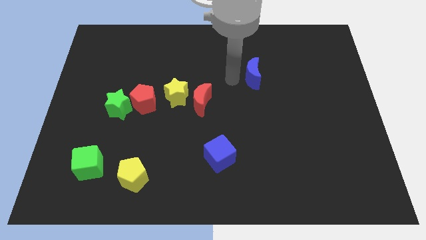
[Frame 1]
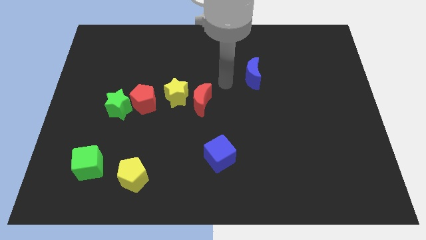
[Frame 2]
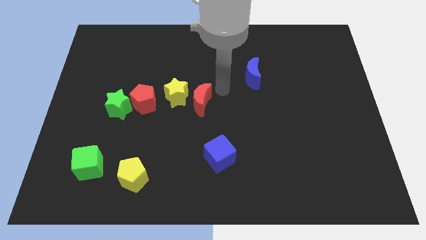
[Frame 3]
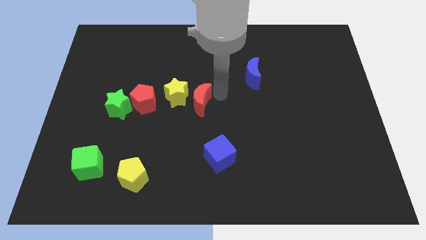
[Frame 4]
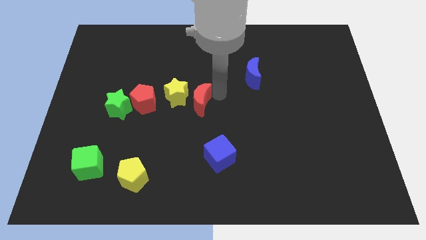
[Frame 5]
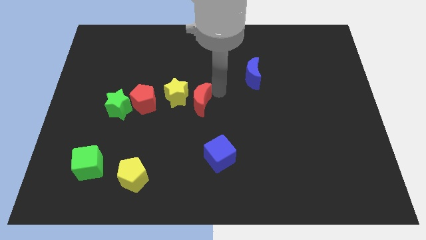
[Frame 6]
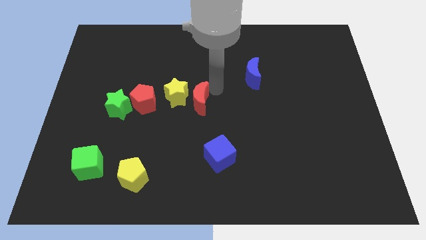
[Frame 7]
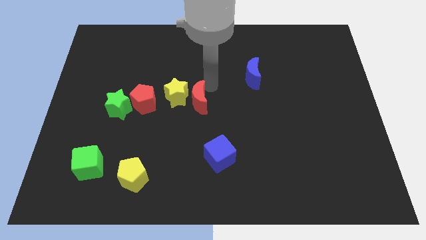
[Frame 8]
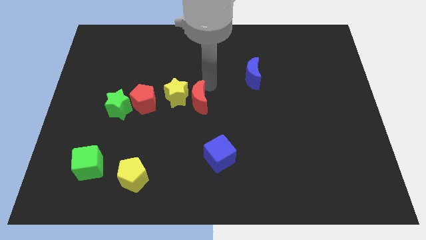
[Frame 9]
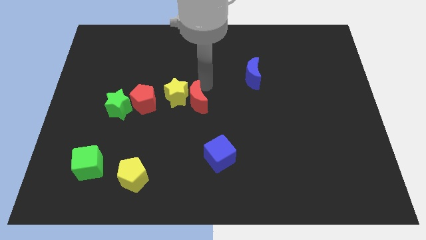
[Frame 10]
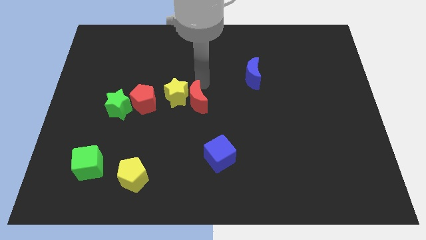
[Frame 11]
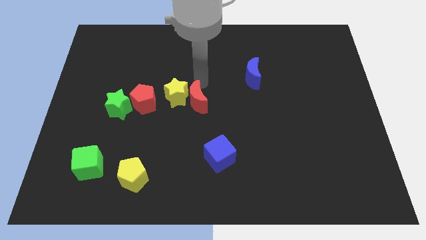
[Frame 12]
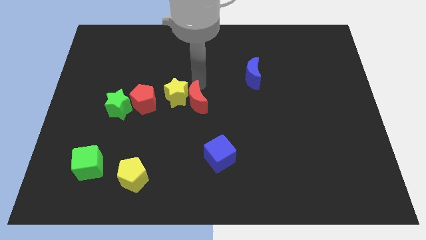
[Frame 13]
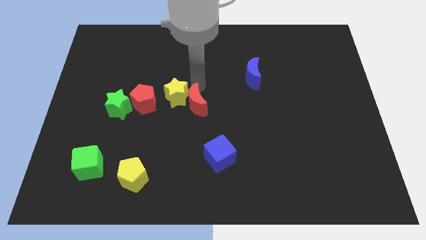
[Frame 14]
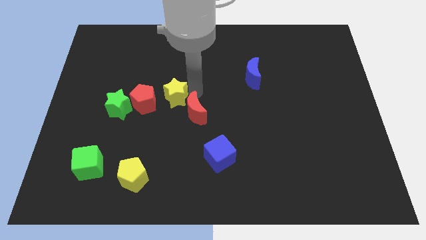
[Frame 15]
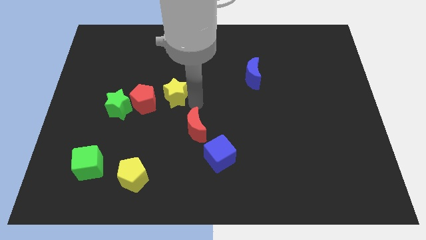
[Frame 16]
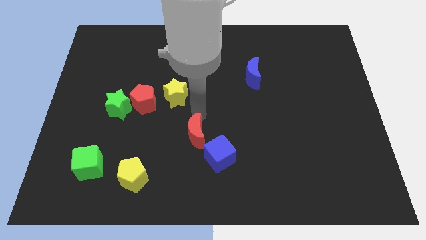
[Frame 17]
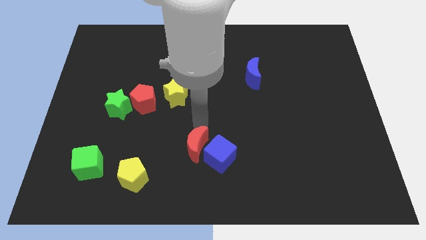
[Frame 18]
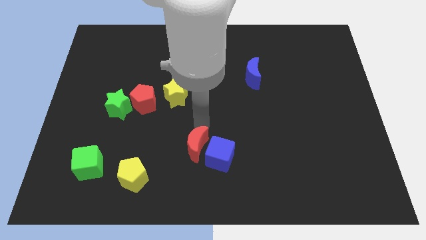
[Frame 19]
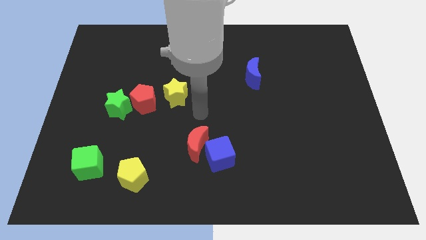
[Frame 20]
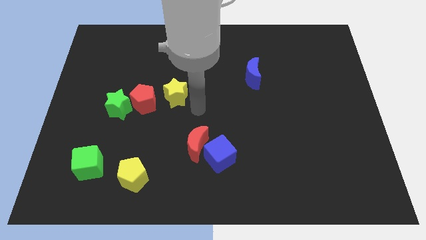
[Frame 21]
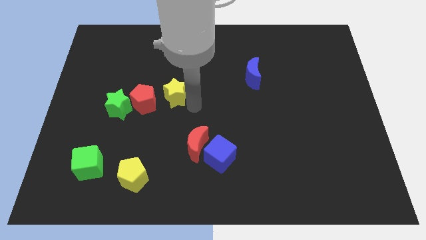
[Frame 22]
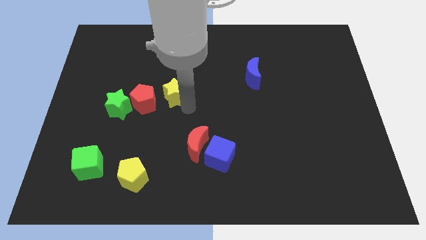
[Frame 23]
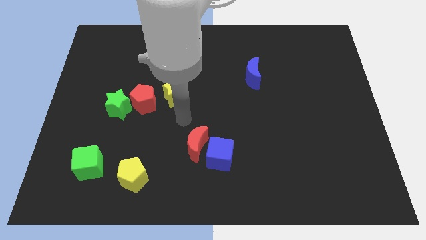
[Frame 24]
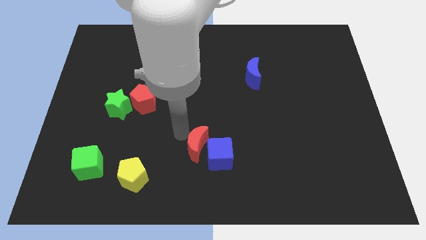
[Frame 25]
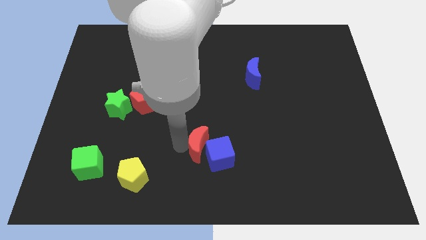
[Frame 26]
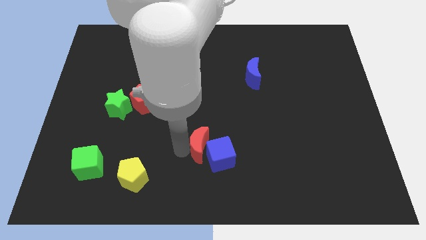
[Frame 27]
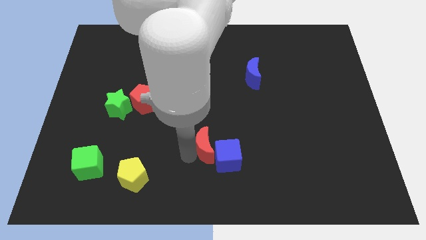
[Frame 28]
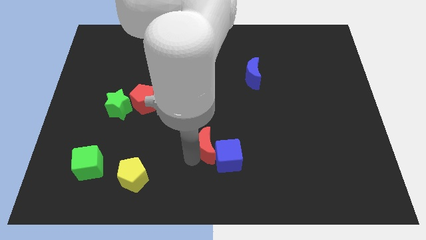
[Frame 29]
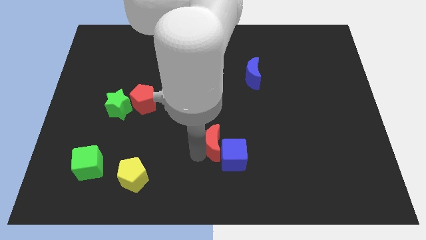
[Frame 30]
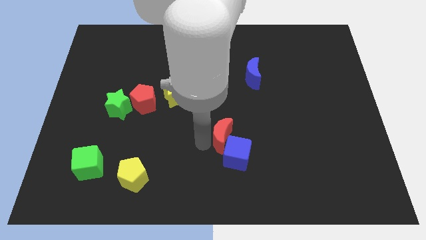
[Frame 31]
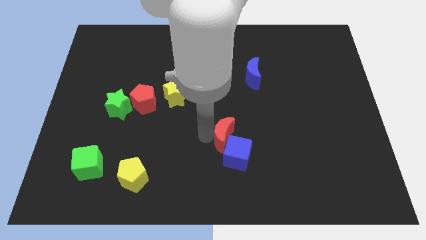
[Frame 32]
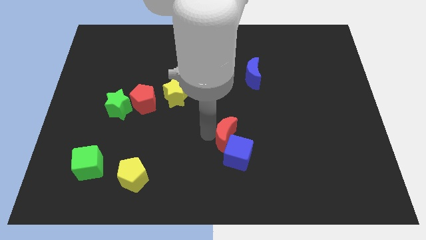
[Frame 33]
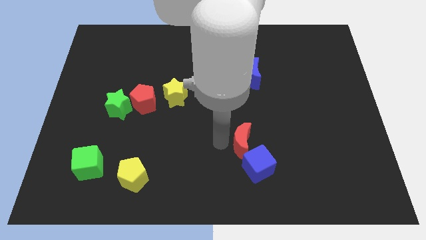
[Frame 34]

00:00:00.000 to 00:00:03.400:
move red moon and blue cube slightly right

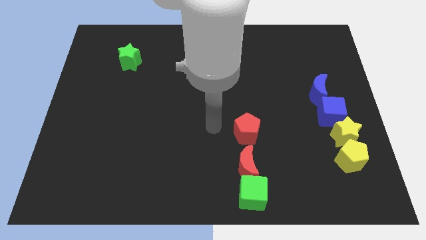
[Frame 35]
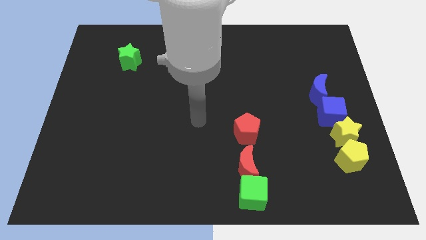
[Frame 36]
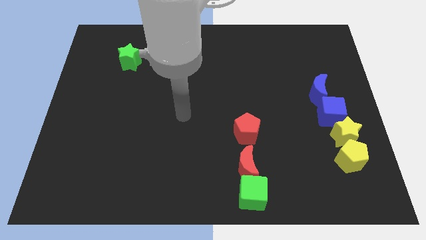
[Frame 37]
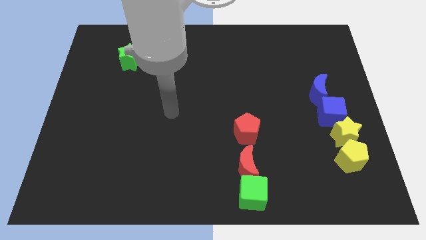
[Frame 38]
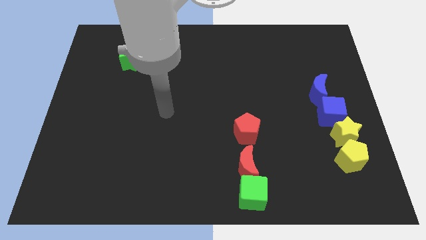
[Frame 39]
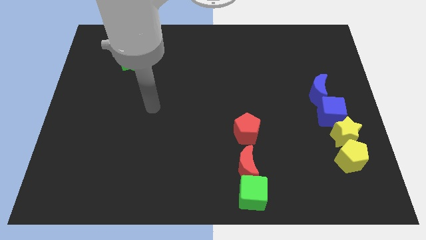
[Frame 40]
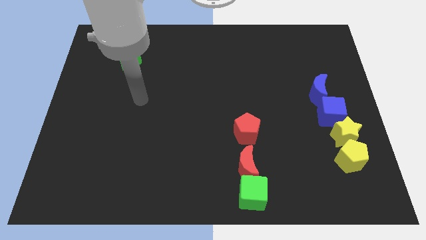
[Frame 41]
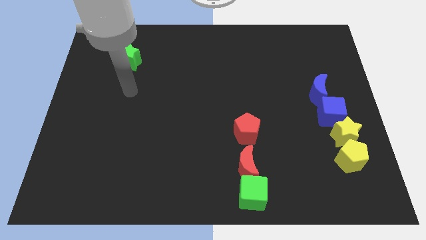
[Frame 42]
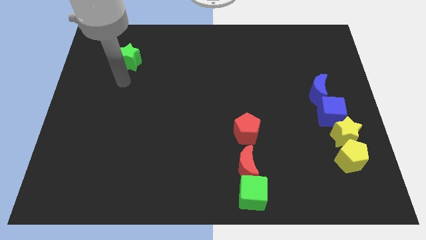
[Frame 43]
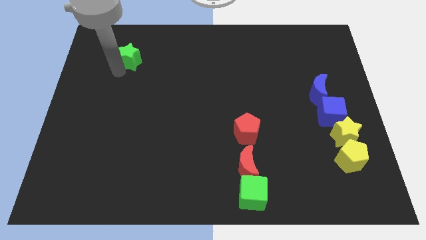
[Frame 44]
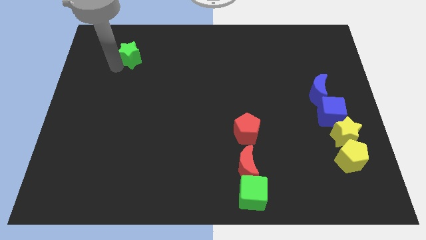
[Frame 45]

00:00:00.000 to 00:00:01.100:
move the arm towards the green star

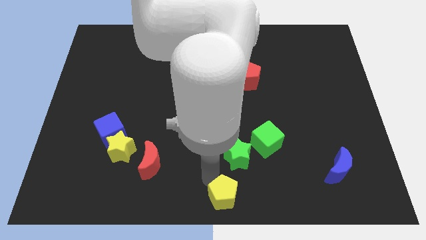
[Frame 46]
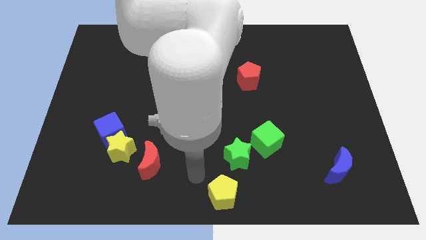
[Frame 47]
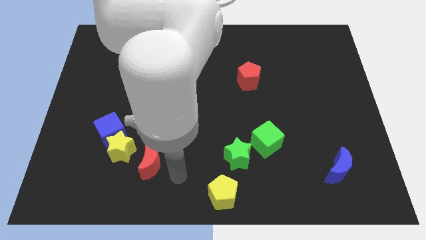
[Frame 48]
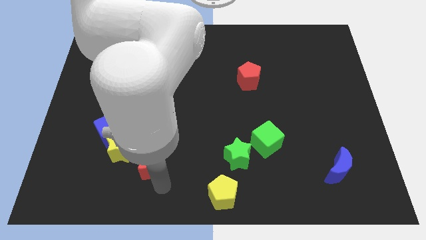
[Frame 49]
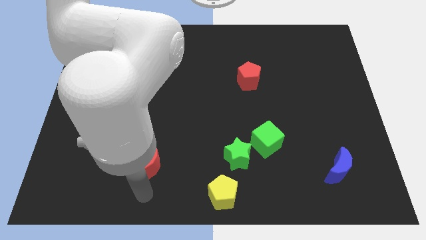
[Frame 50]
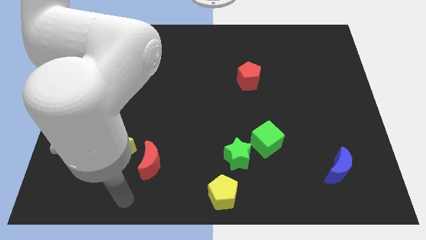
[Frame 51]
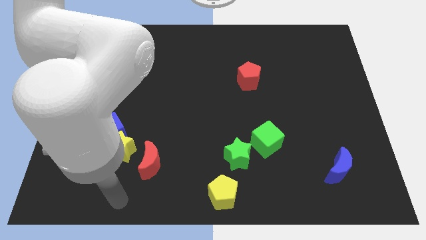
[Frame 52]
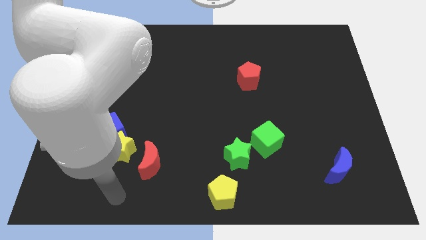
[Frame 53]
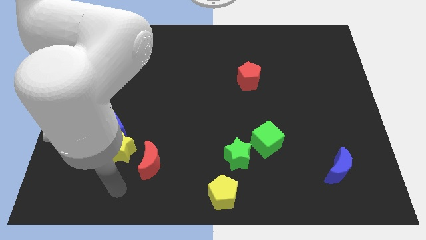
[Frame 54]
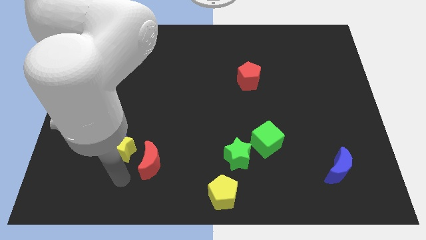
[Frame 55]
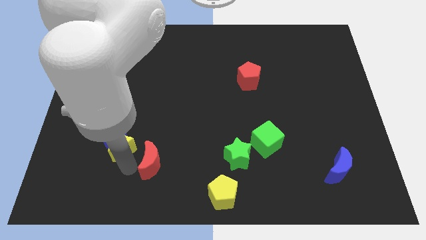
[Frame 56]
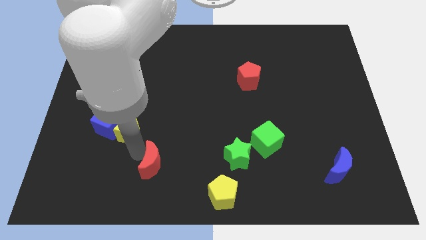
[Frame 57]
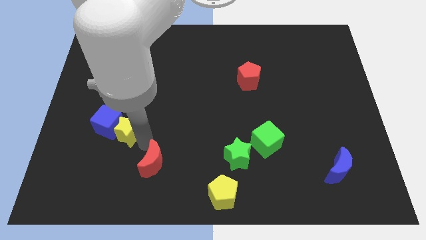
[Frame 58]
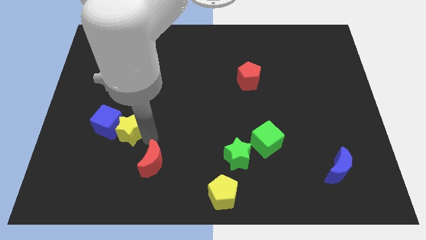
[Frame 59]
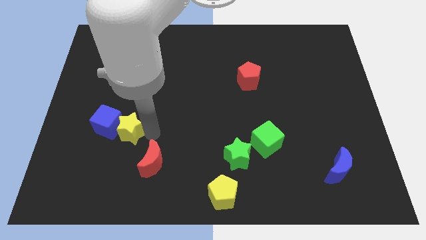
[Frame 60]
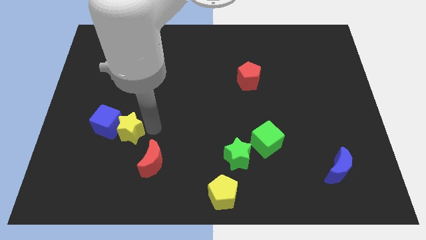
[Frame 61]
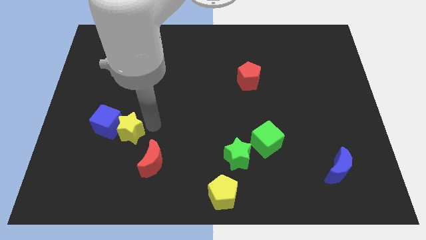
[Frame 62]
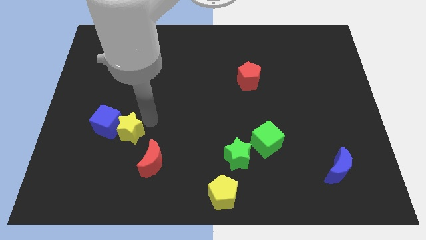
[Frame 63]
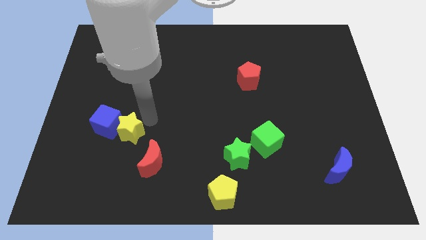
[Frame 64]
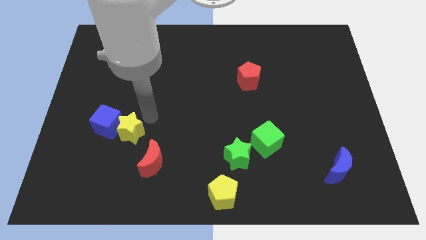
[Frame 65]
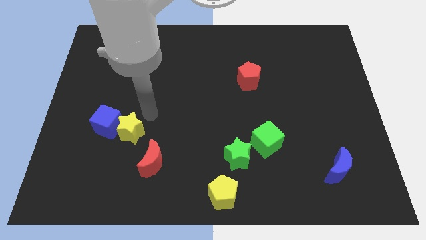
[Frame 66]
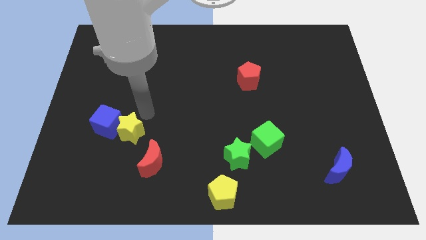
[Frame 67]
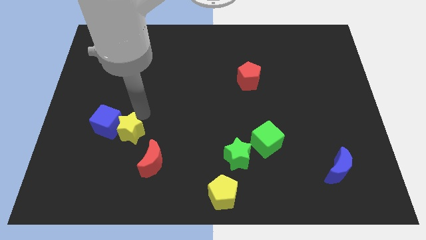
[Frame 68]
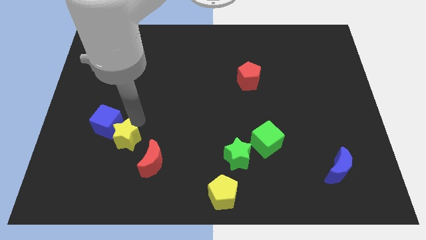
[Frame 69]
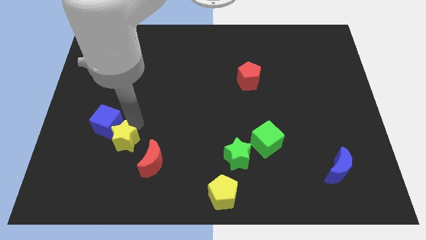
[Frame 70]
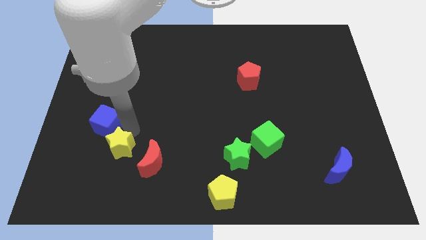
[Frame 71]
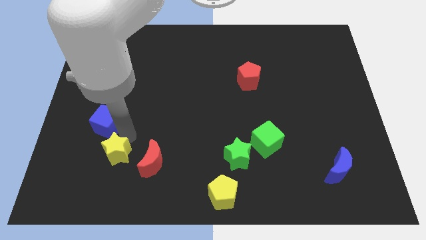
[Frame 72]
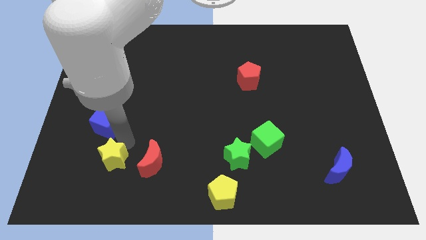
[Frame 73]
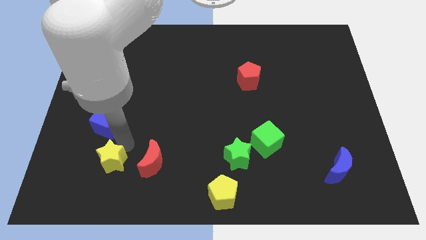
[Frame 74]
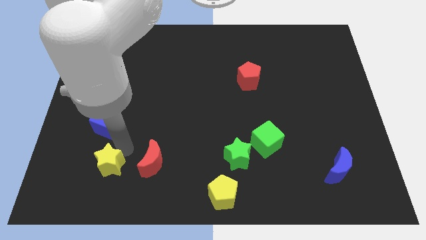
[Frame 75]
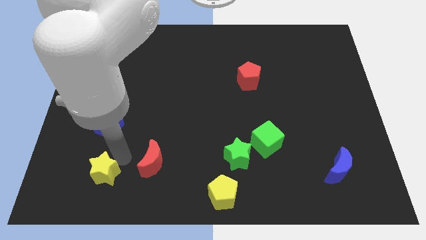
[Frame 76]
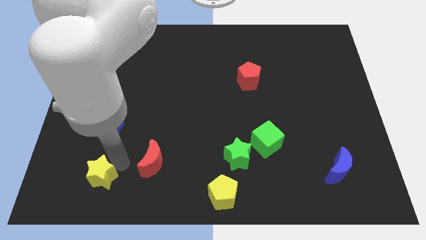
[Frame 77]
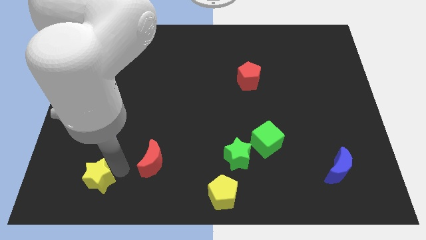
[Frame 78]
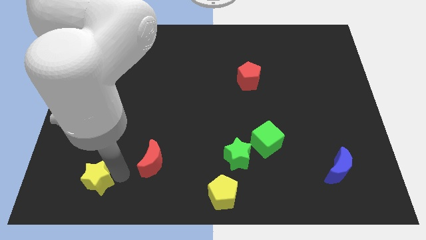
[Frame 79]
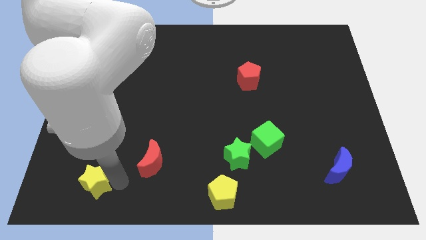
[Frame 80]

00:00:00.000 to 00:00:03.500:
separate the yellow star from the blue cube

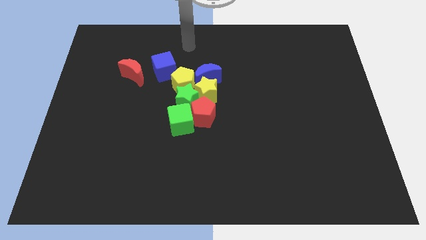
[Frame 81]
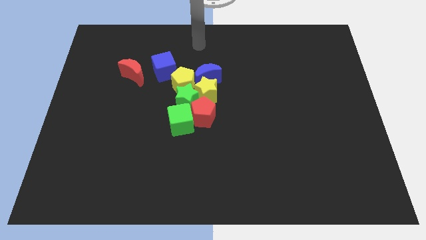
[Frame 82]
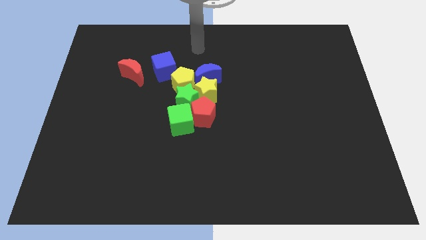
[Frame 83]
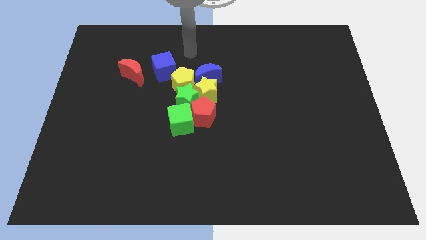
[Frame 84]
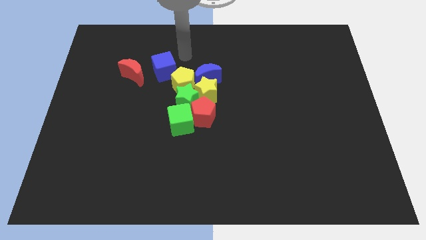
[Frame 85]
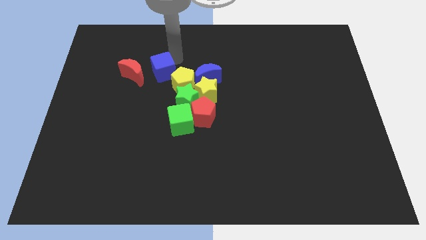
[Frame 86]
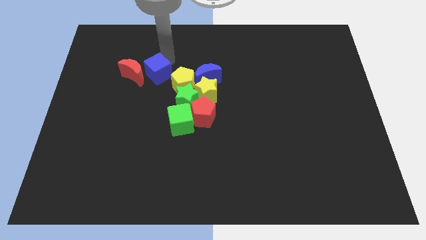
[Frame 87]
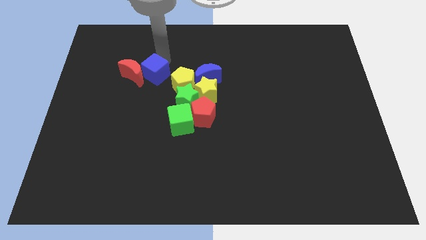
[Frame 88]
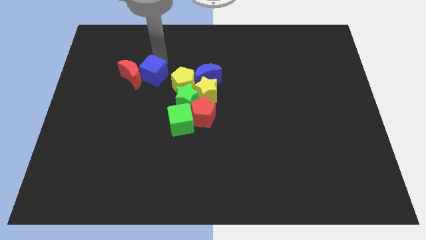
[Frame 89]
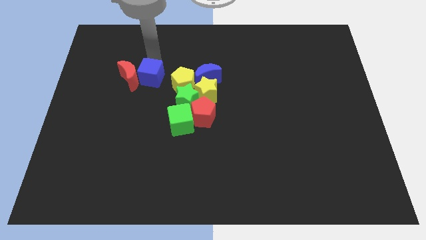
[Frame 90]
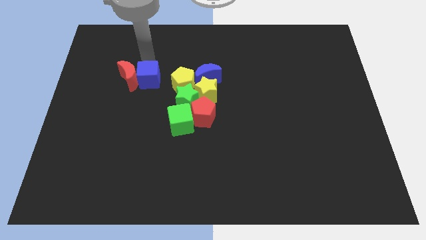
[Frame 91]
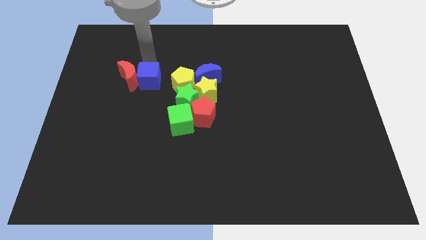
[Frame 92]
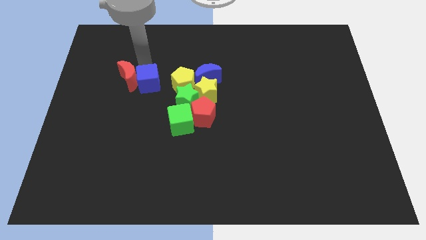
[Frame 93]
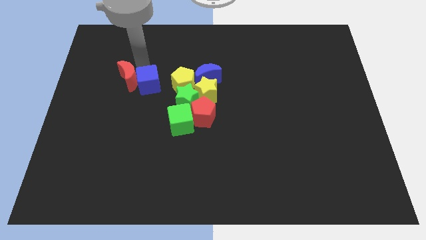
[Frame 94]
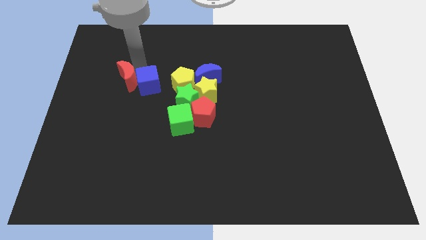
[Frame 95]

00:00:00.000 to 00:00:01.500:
place the blue cube left to the yellow pentagon
